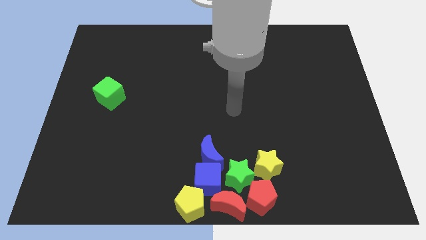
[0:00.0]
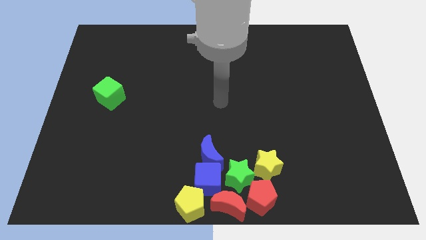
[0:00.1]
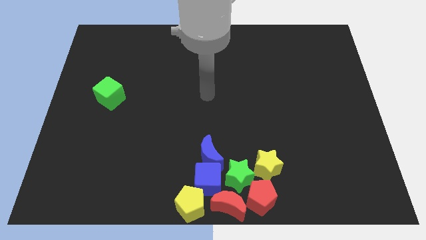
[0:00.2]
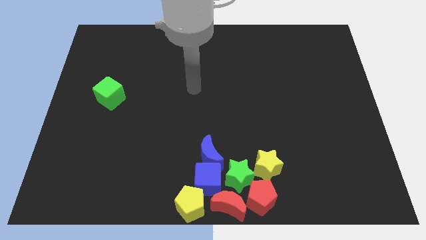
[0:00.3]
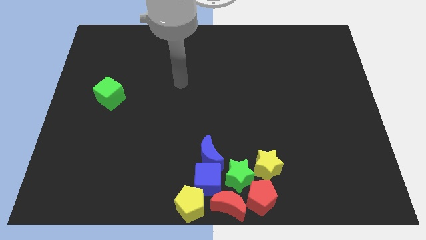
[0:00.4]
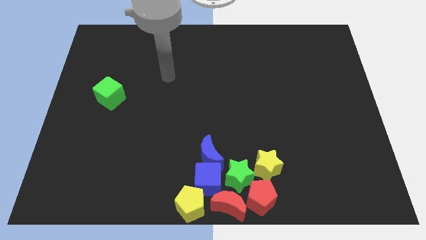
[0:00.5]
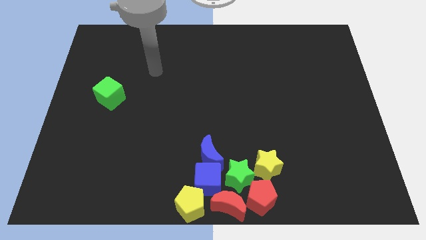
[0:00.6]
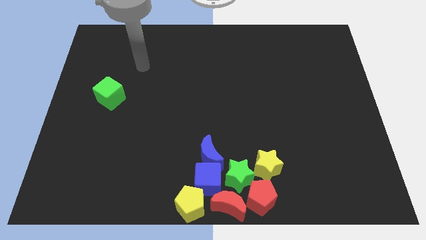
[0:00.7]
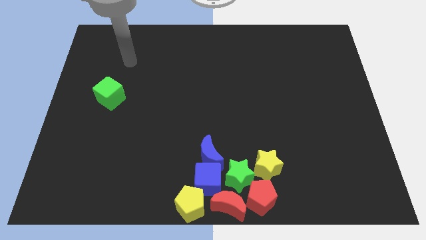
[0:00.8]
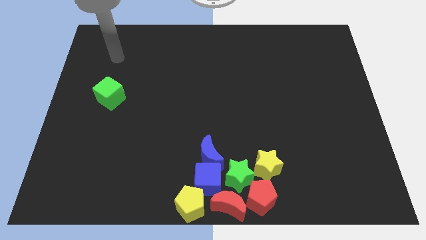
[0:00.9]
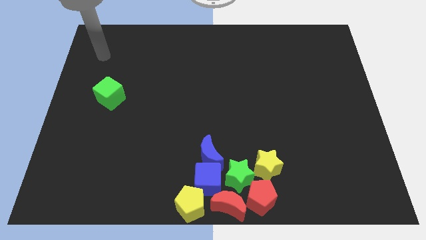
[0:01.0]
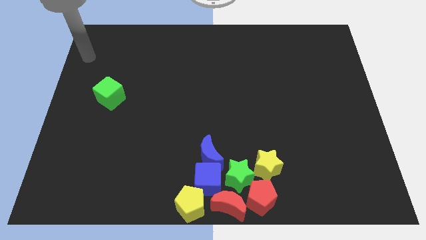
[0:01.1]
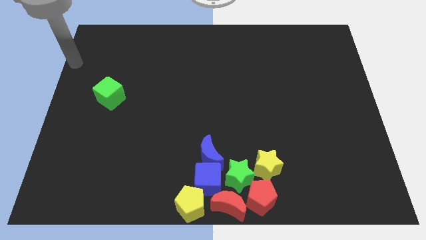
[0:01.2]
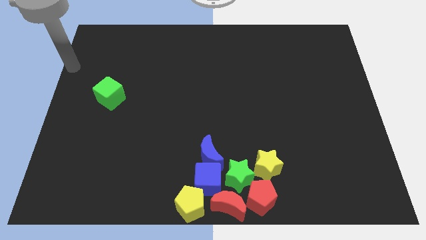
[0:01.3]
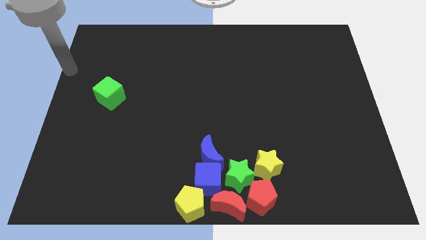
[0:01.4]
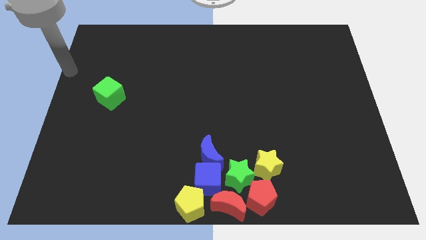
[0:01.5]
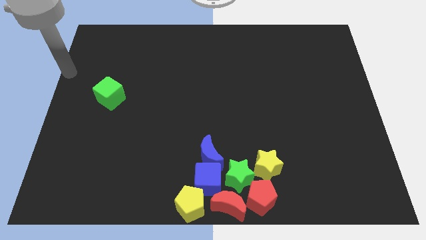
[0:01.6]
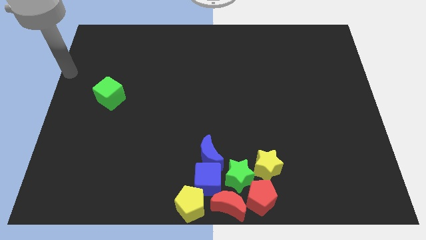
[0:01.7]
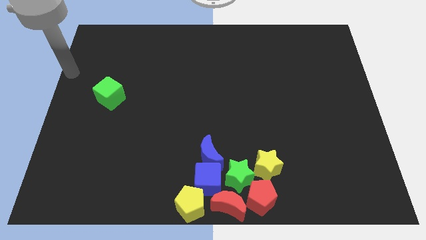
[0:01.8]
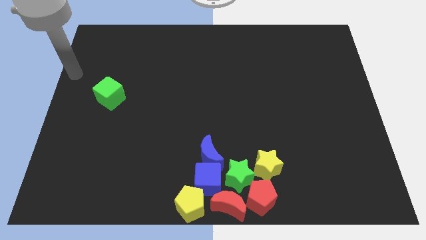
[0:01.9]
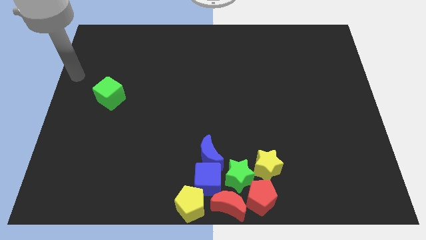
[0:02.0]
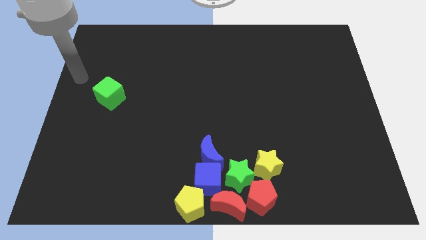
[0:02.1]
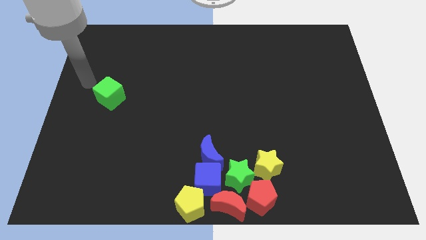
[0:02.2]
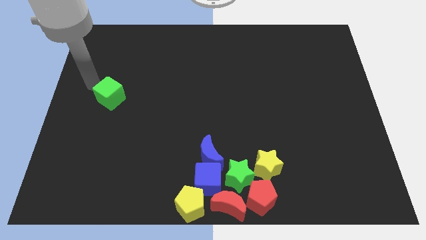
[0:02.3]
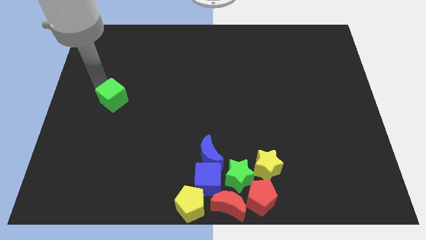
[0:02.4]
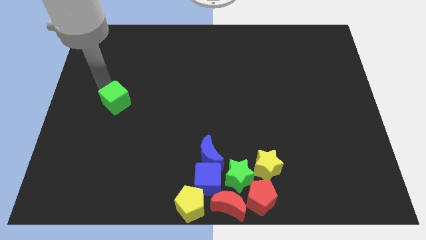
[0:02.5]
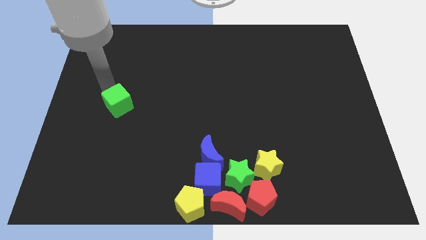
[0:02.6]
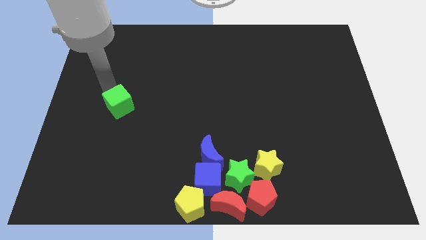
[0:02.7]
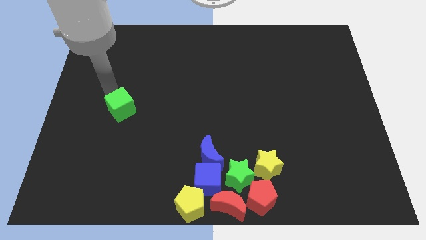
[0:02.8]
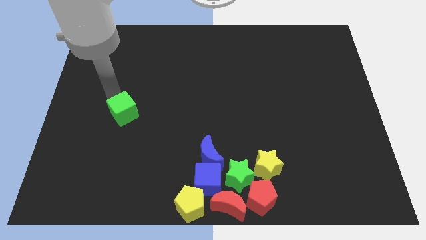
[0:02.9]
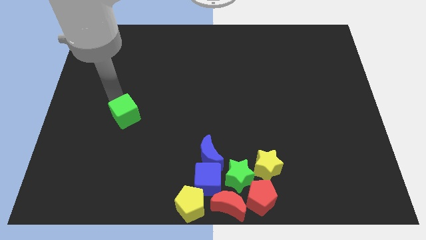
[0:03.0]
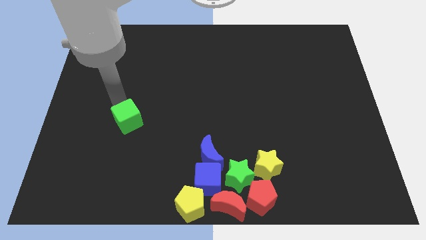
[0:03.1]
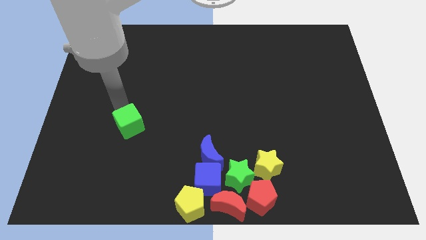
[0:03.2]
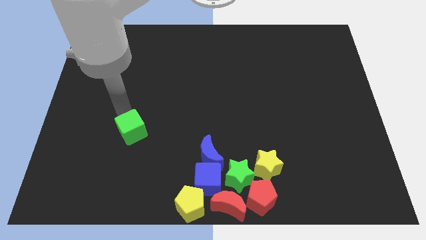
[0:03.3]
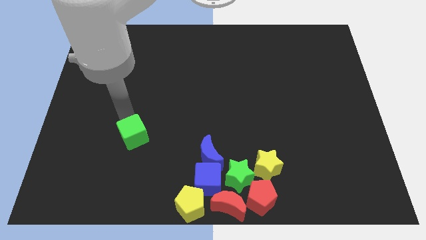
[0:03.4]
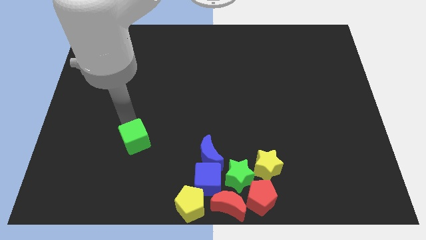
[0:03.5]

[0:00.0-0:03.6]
push the green cube to the bottom of the board

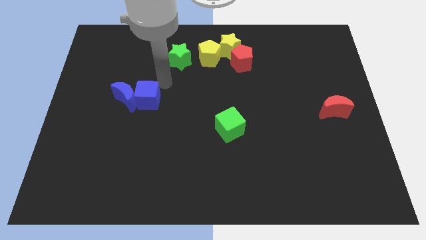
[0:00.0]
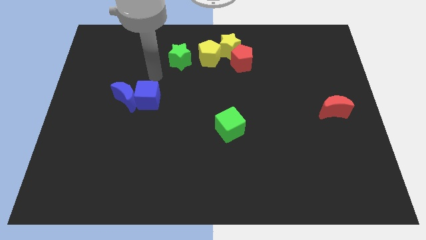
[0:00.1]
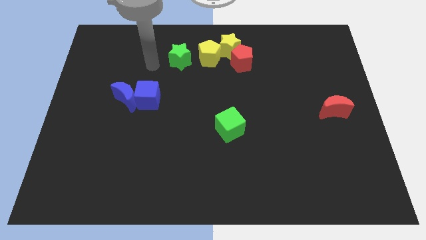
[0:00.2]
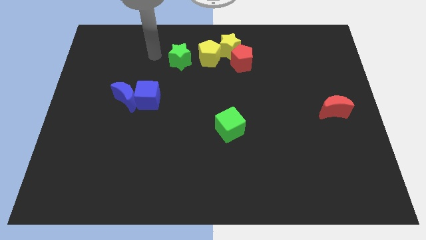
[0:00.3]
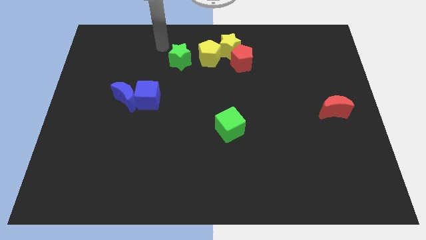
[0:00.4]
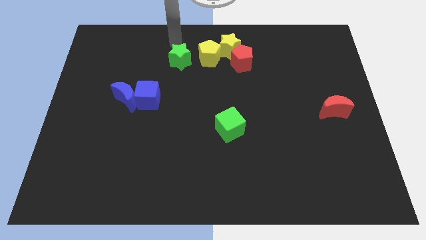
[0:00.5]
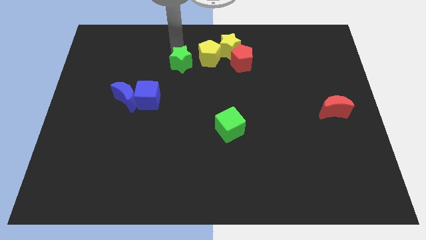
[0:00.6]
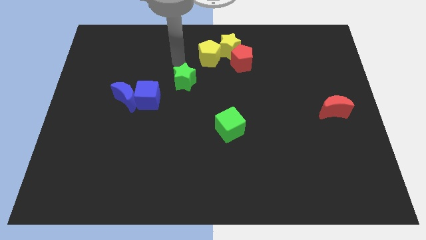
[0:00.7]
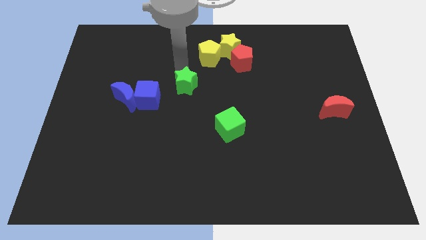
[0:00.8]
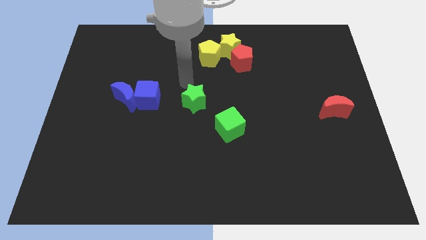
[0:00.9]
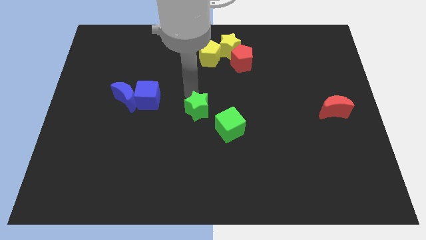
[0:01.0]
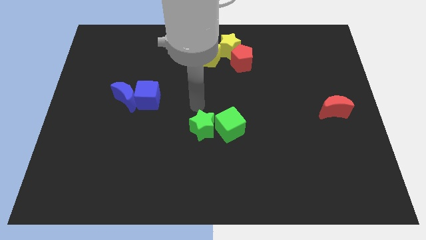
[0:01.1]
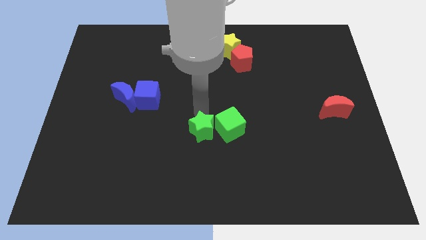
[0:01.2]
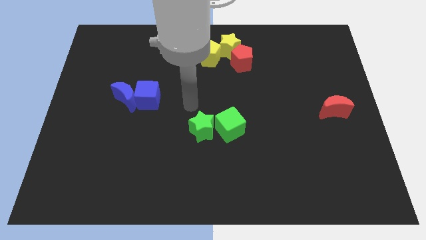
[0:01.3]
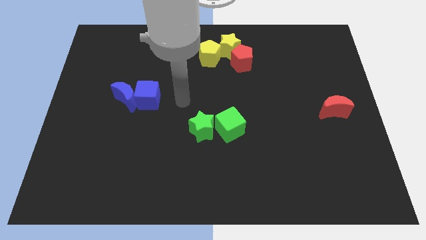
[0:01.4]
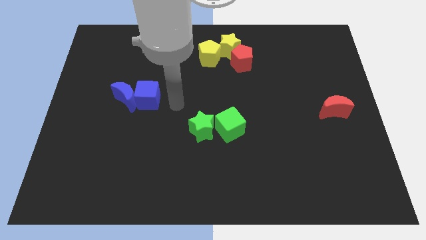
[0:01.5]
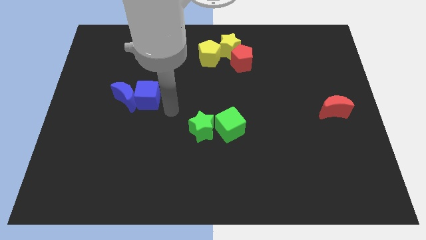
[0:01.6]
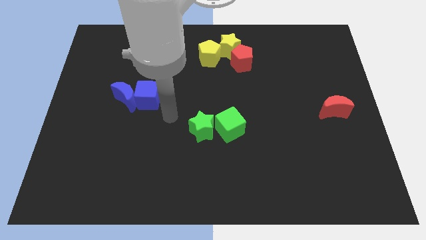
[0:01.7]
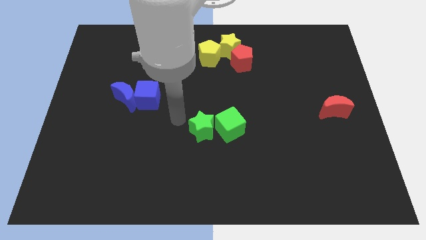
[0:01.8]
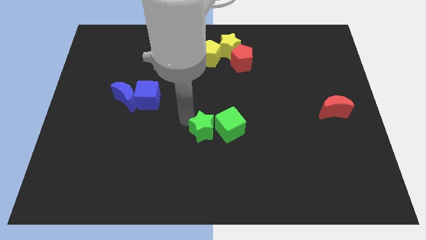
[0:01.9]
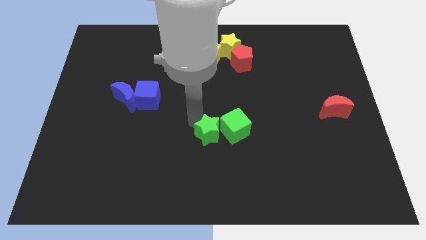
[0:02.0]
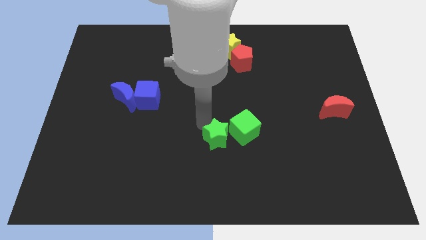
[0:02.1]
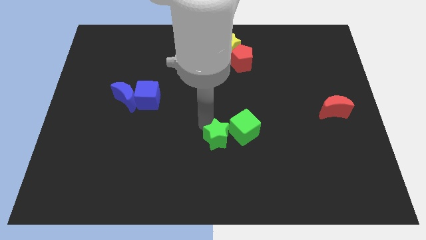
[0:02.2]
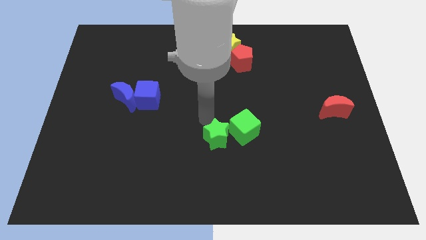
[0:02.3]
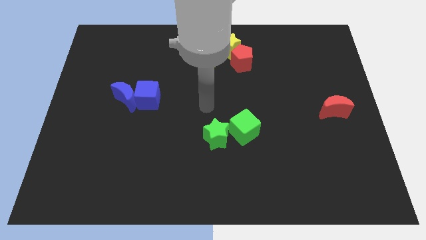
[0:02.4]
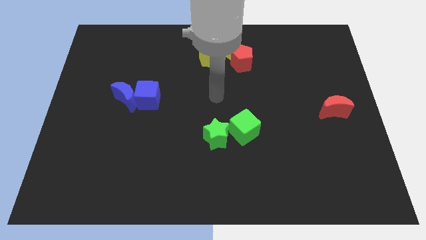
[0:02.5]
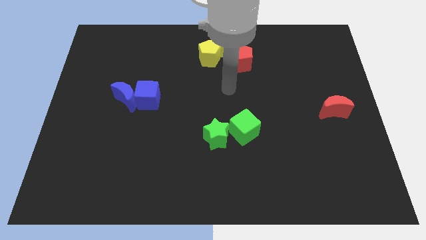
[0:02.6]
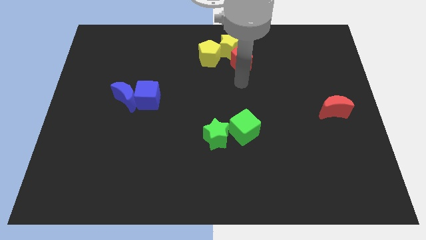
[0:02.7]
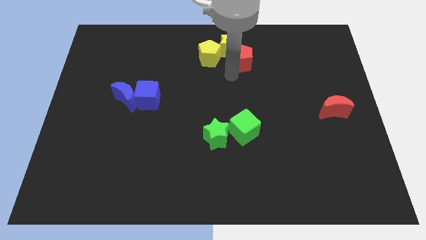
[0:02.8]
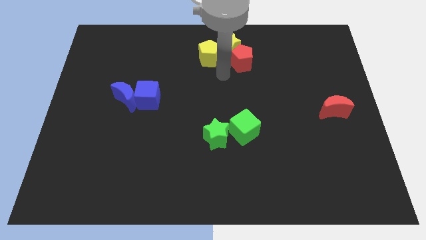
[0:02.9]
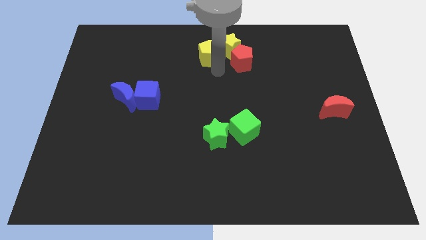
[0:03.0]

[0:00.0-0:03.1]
move the green star close to the green cube

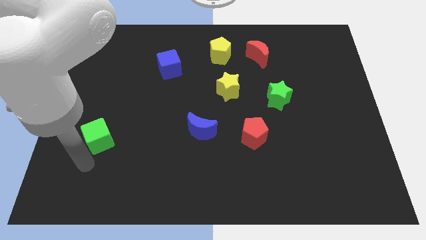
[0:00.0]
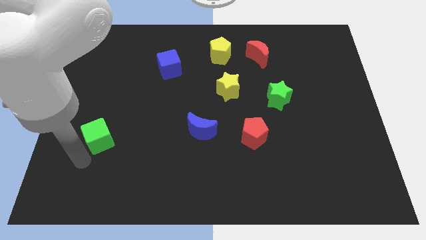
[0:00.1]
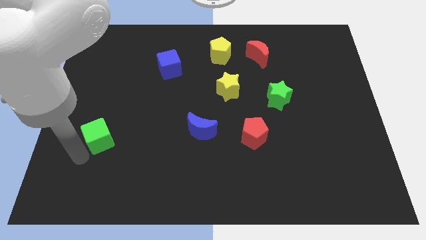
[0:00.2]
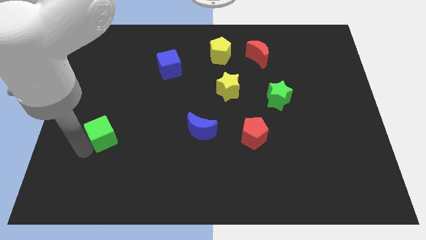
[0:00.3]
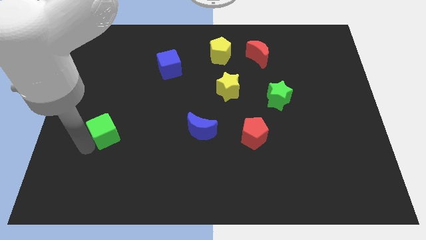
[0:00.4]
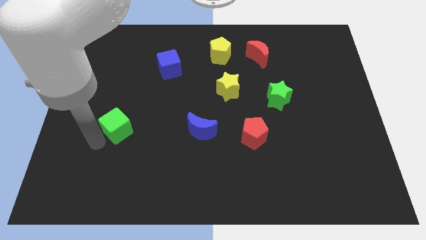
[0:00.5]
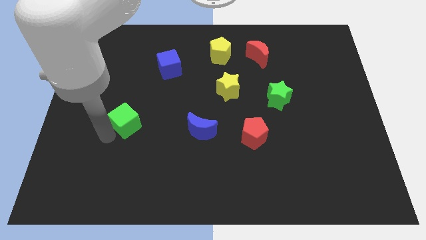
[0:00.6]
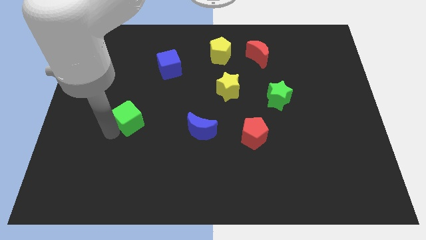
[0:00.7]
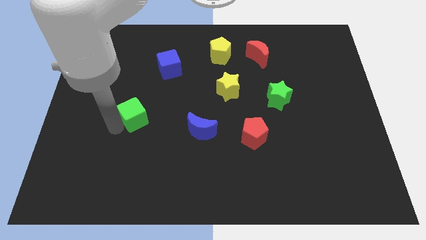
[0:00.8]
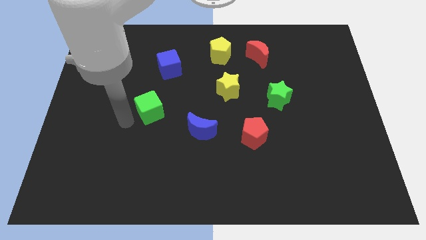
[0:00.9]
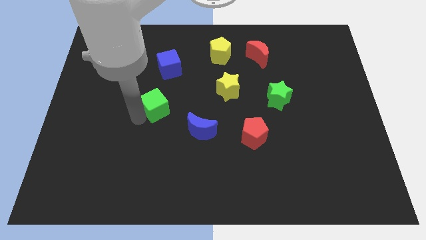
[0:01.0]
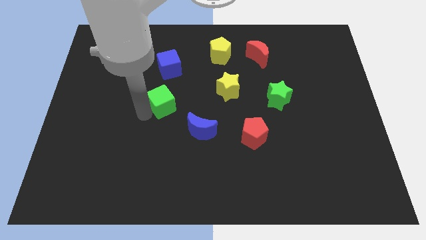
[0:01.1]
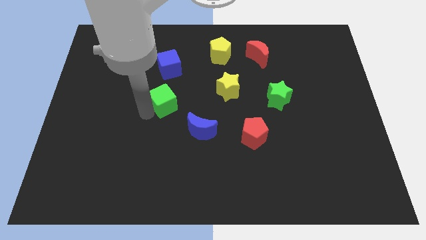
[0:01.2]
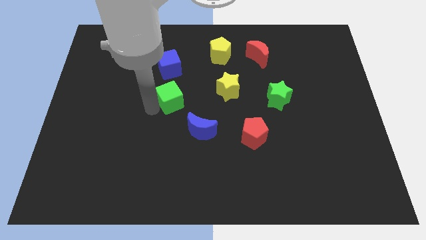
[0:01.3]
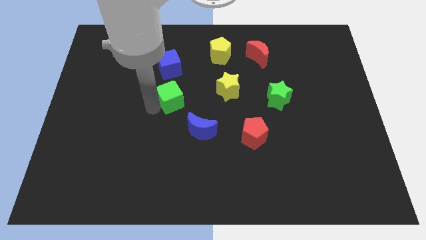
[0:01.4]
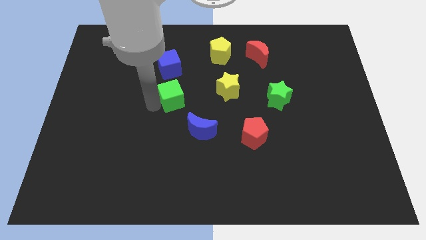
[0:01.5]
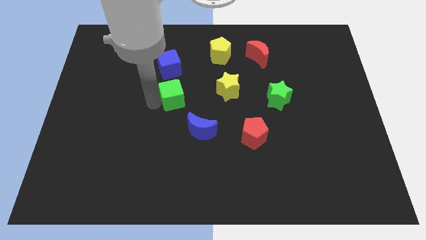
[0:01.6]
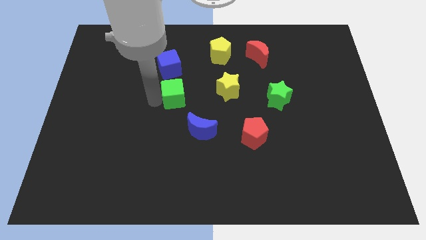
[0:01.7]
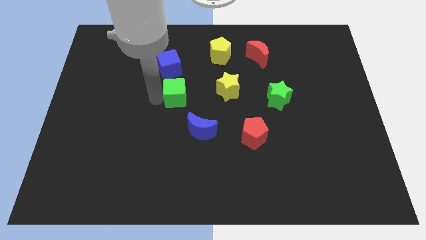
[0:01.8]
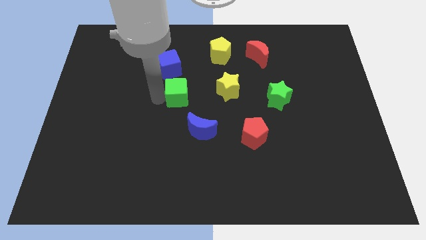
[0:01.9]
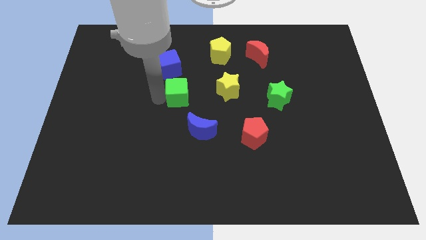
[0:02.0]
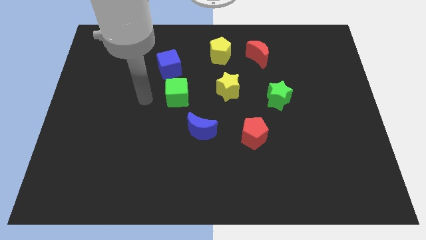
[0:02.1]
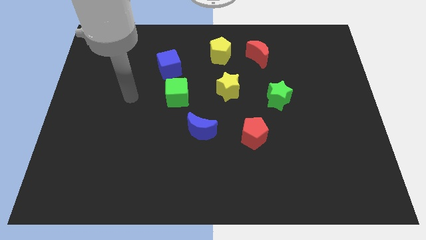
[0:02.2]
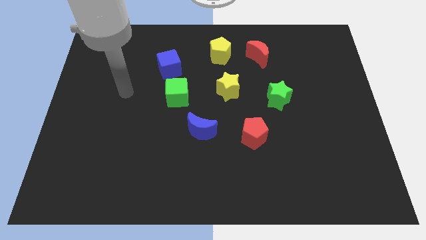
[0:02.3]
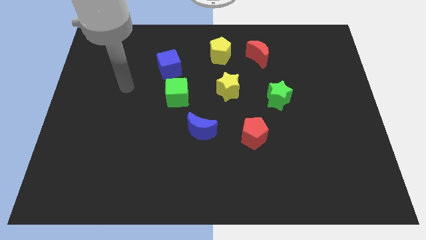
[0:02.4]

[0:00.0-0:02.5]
drag green cube towards middle of the board
